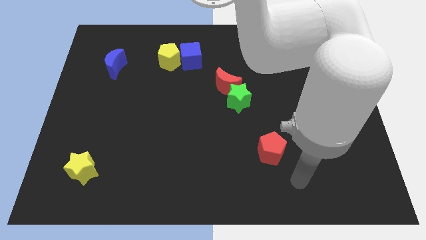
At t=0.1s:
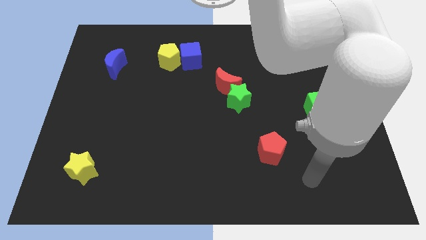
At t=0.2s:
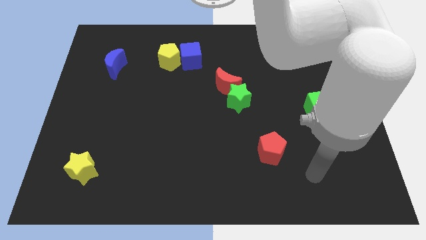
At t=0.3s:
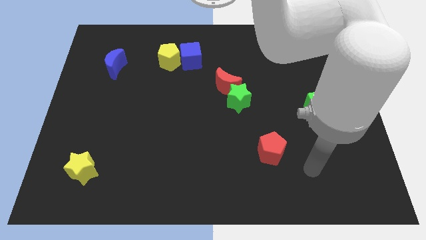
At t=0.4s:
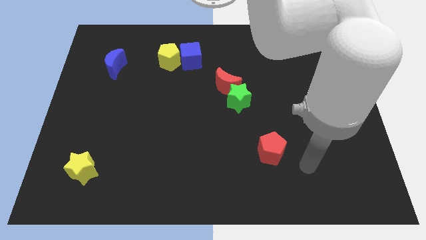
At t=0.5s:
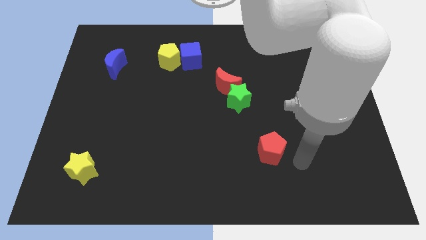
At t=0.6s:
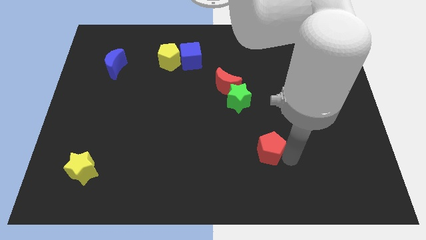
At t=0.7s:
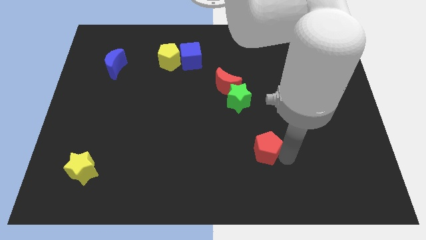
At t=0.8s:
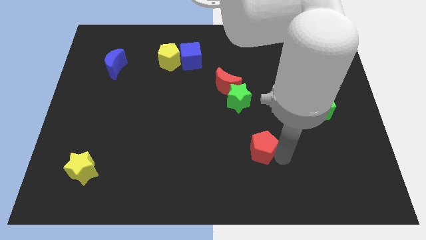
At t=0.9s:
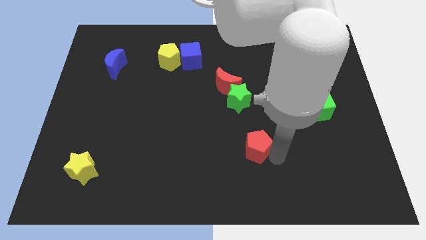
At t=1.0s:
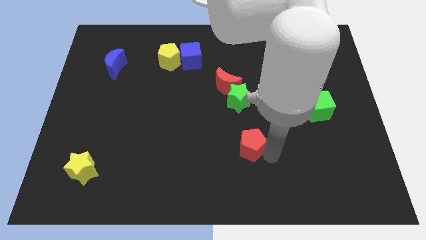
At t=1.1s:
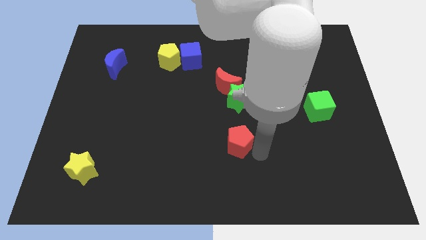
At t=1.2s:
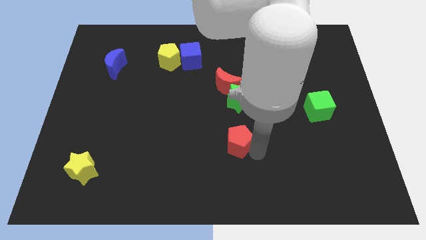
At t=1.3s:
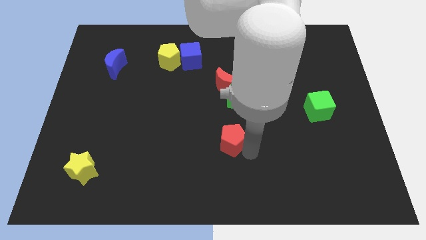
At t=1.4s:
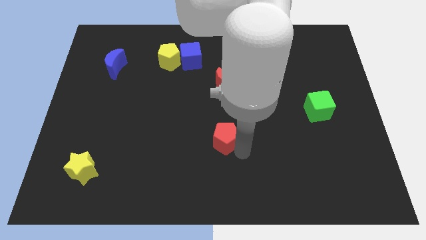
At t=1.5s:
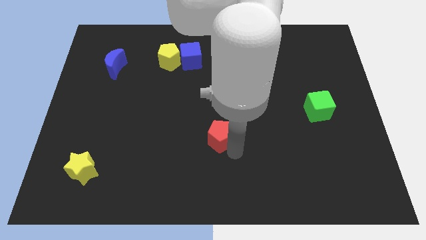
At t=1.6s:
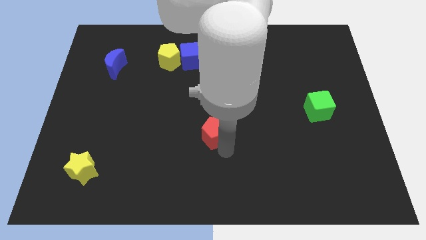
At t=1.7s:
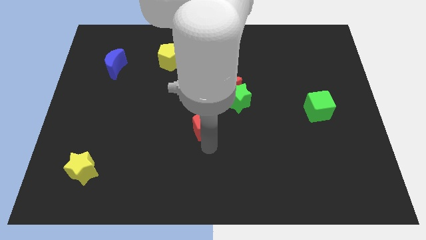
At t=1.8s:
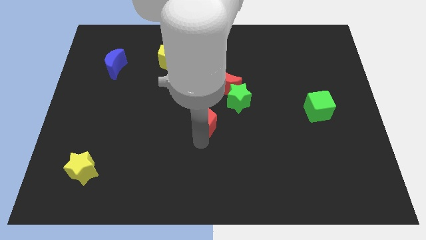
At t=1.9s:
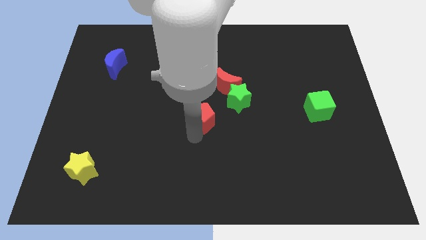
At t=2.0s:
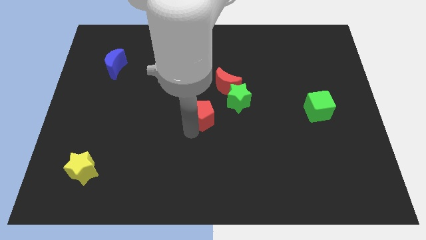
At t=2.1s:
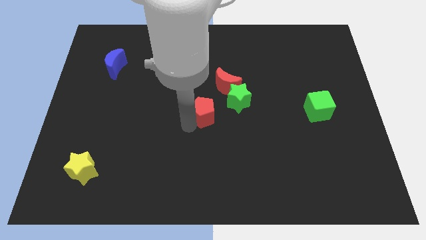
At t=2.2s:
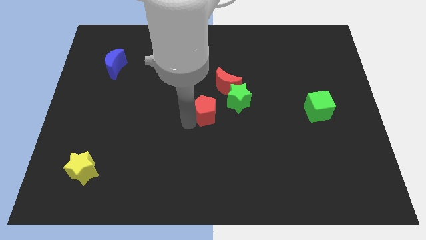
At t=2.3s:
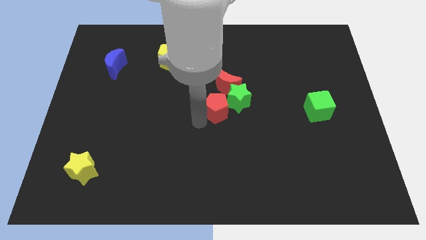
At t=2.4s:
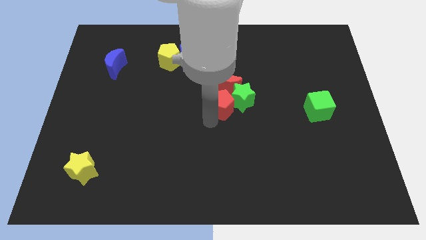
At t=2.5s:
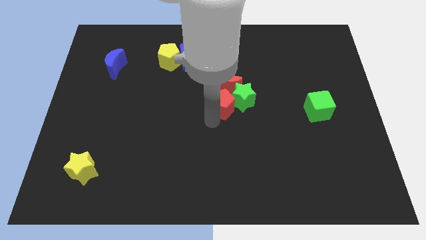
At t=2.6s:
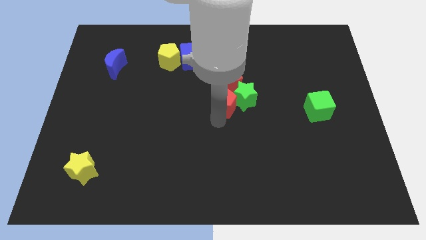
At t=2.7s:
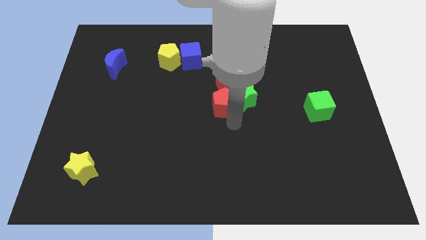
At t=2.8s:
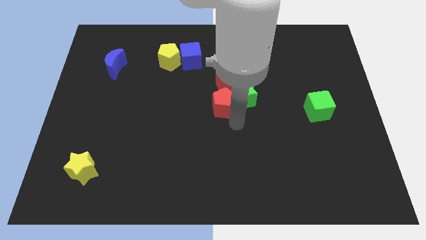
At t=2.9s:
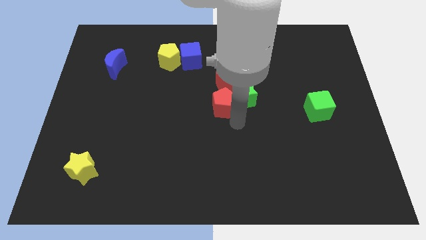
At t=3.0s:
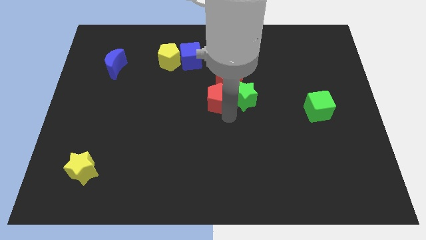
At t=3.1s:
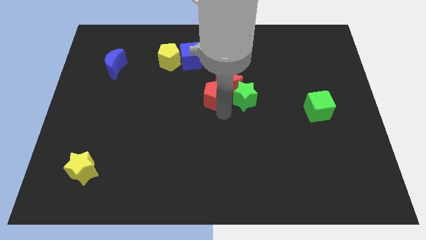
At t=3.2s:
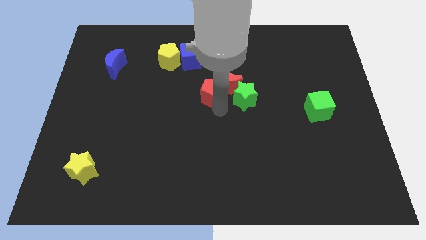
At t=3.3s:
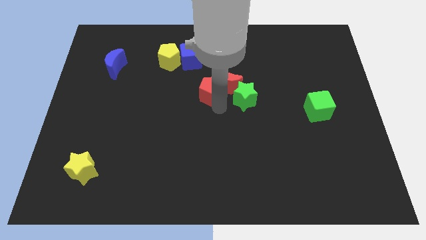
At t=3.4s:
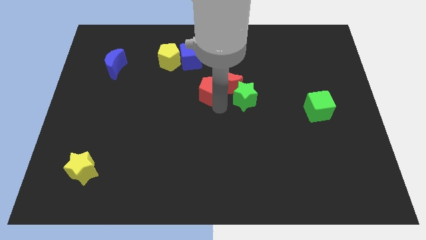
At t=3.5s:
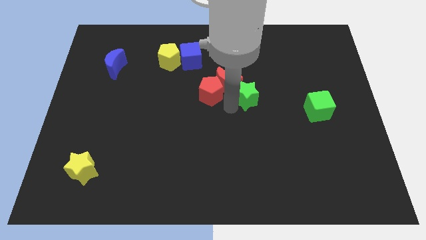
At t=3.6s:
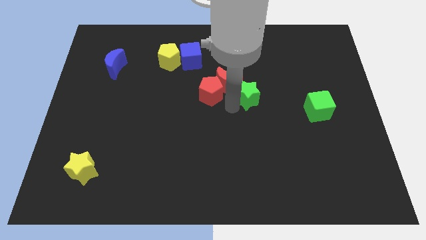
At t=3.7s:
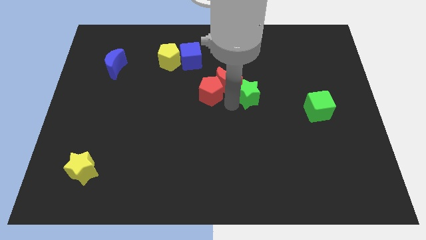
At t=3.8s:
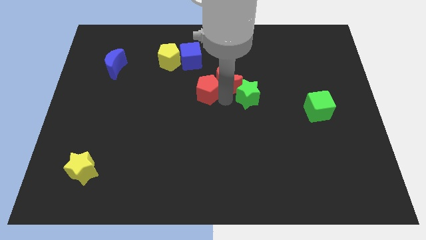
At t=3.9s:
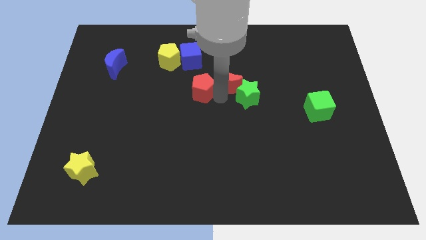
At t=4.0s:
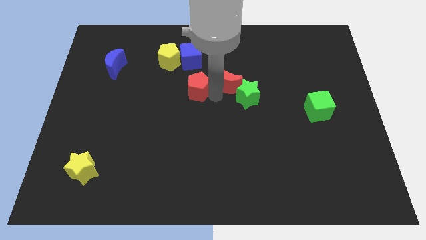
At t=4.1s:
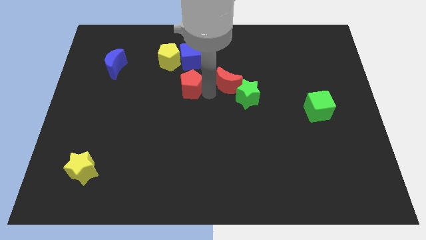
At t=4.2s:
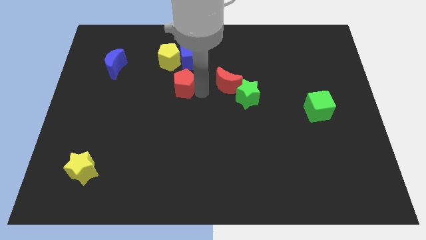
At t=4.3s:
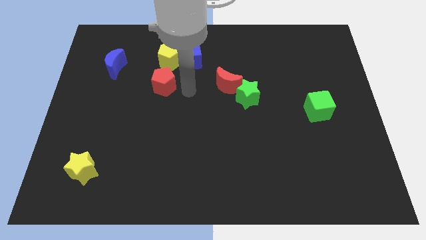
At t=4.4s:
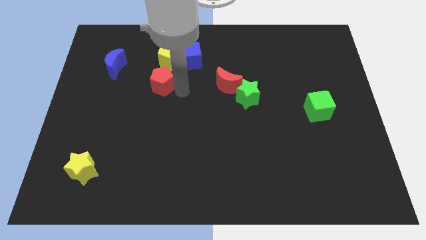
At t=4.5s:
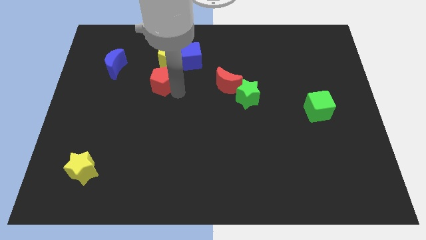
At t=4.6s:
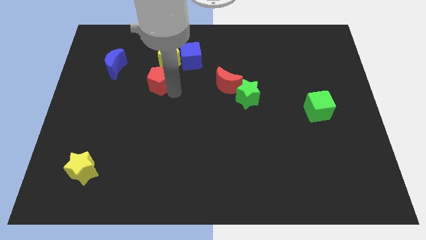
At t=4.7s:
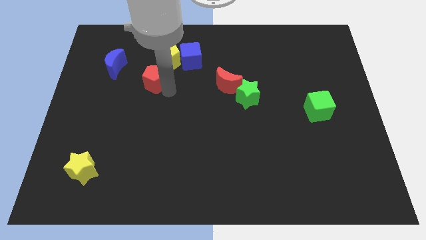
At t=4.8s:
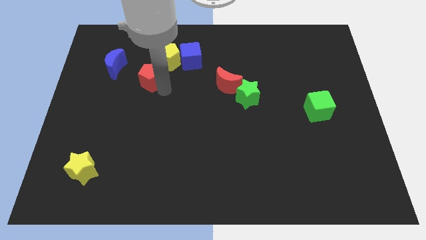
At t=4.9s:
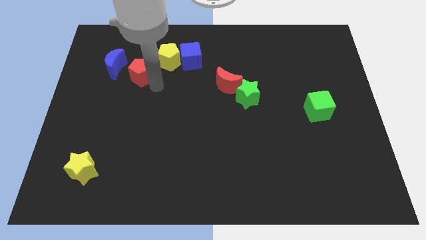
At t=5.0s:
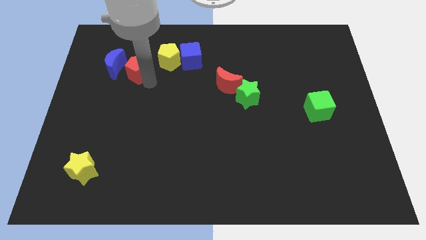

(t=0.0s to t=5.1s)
drag the red pentagon close to the yellow pentagon

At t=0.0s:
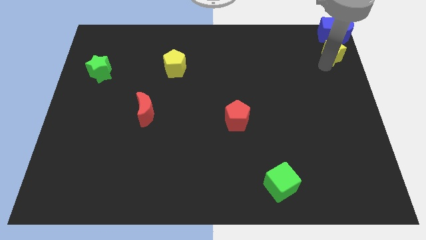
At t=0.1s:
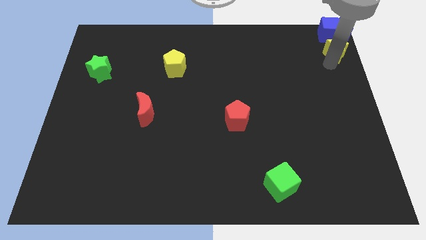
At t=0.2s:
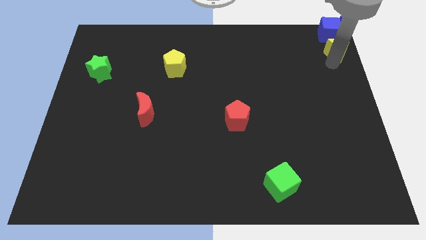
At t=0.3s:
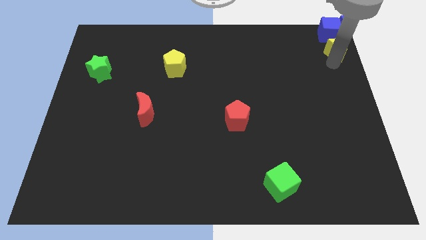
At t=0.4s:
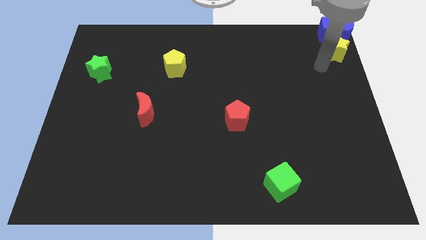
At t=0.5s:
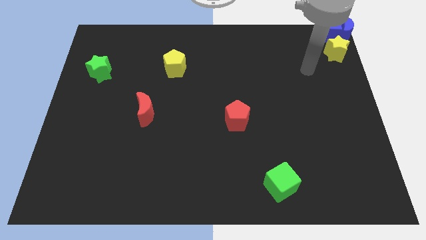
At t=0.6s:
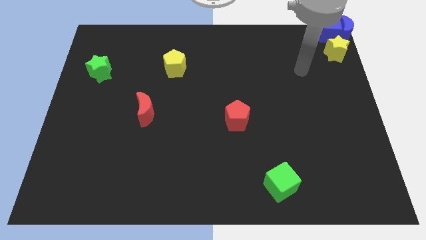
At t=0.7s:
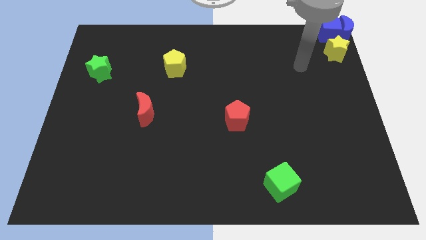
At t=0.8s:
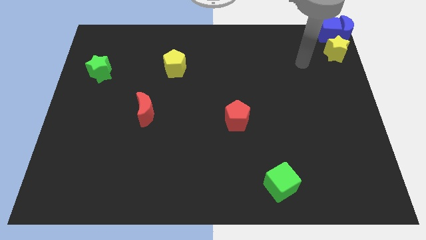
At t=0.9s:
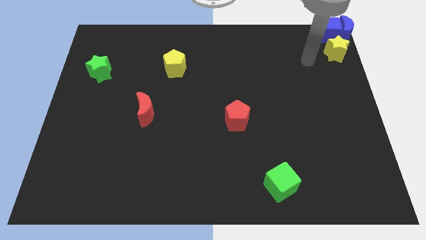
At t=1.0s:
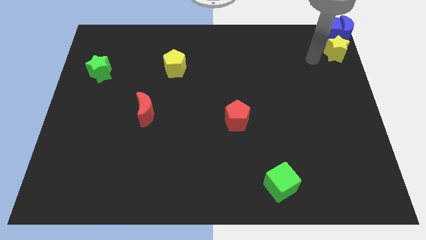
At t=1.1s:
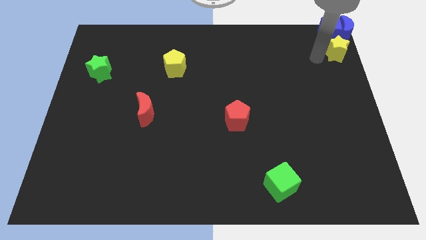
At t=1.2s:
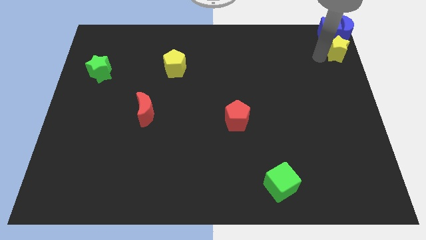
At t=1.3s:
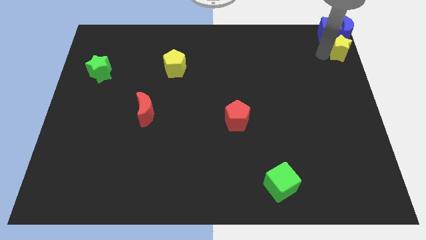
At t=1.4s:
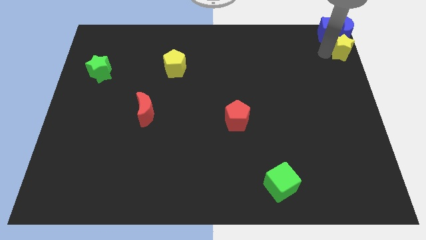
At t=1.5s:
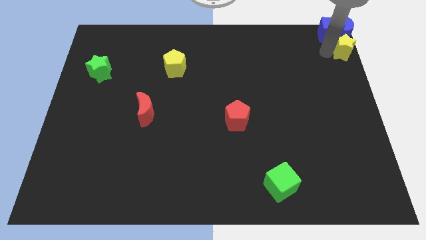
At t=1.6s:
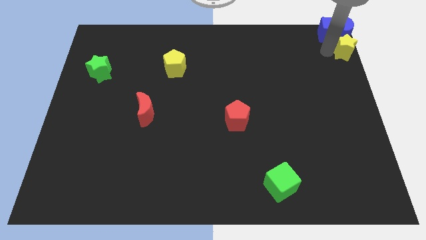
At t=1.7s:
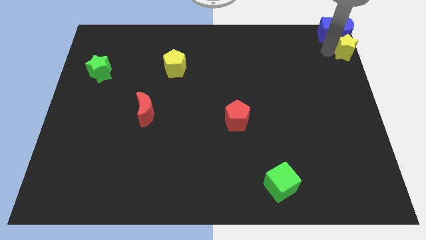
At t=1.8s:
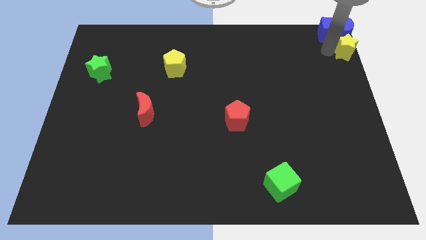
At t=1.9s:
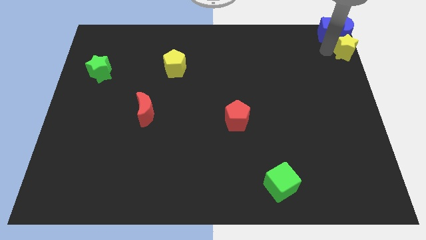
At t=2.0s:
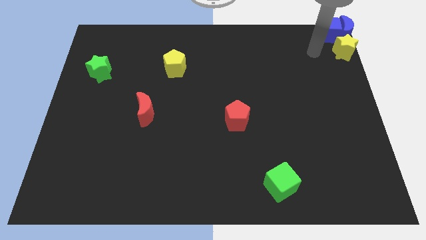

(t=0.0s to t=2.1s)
slide yellow star to the top right corner

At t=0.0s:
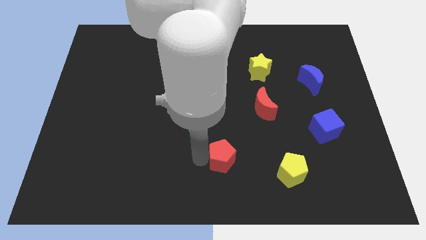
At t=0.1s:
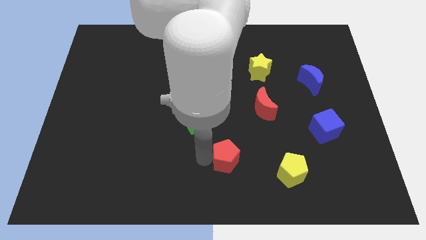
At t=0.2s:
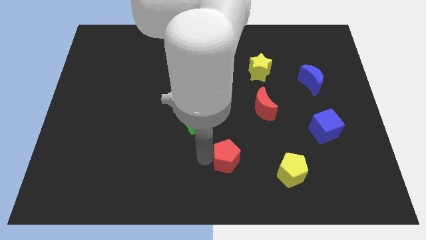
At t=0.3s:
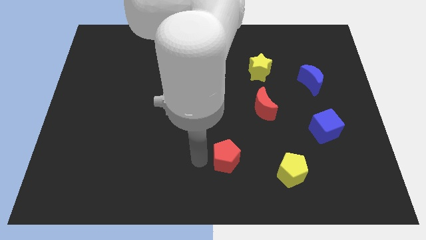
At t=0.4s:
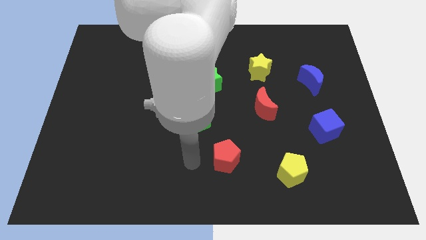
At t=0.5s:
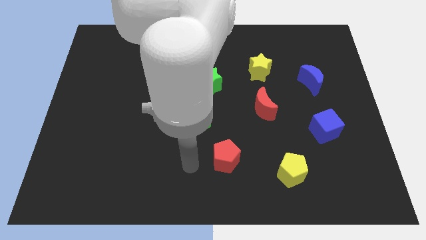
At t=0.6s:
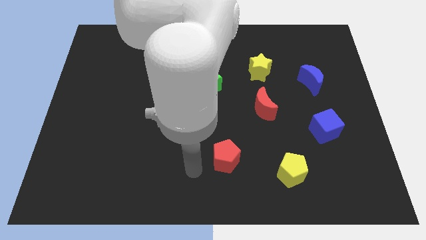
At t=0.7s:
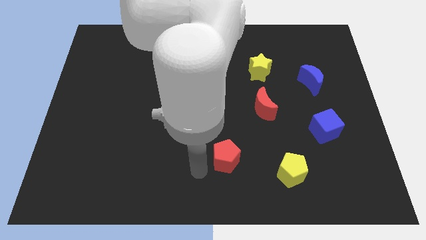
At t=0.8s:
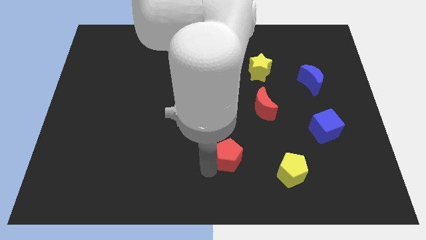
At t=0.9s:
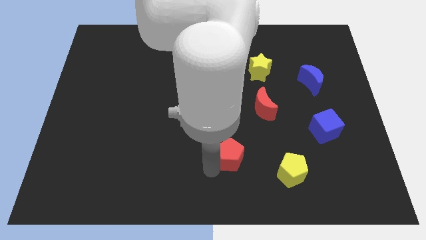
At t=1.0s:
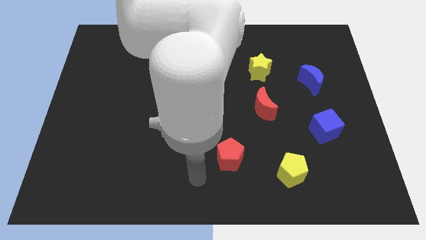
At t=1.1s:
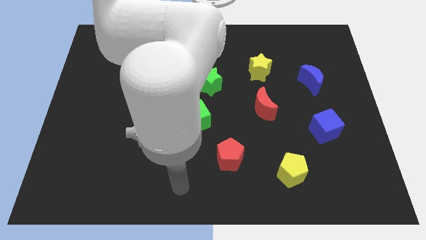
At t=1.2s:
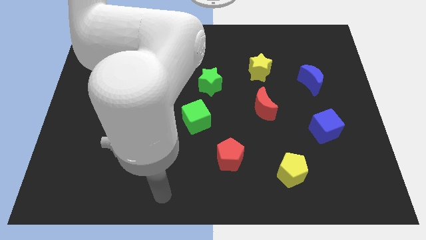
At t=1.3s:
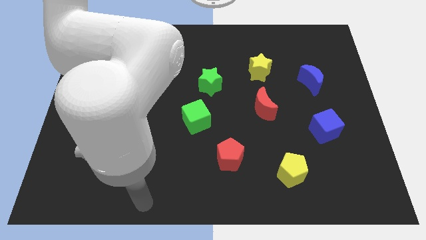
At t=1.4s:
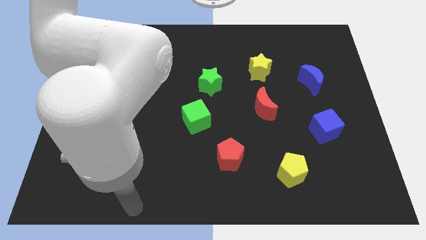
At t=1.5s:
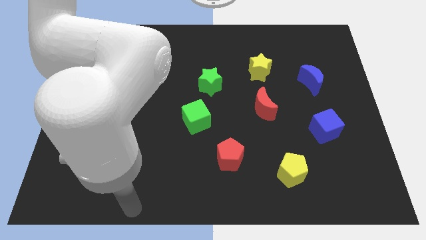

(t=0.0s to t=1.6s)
push the red pentagon left to the yellow pentagon

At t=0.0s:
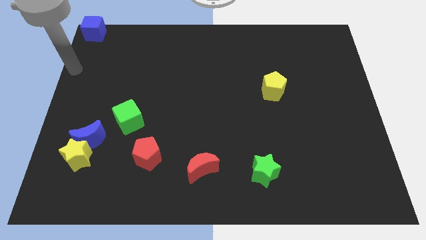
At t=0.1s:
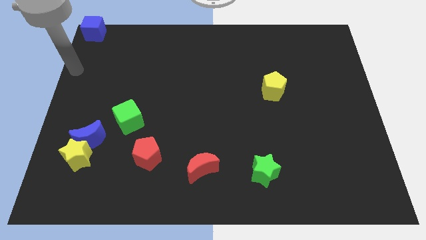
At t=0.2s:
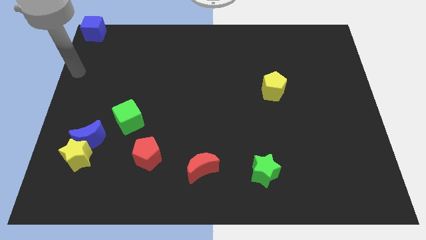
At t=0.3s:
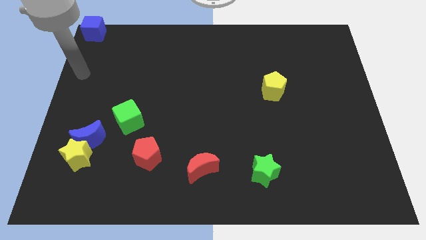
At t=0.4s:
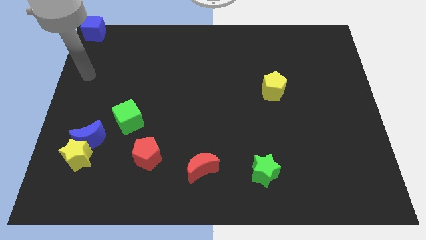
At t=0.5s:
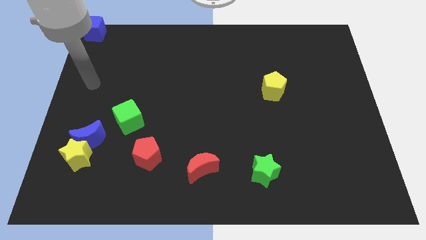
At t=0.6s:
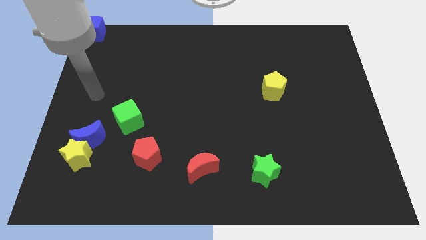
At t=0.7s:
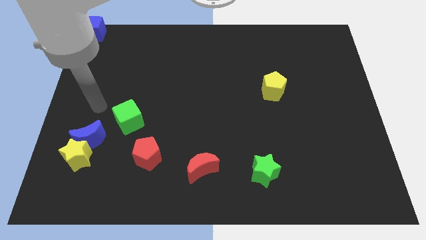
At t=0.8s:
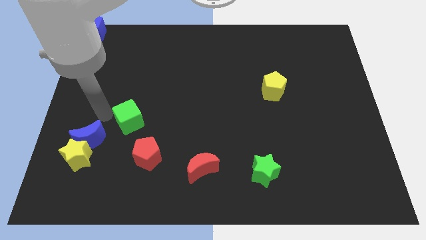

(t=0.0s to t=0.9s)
move arm towards green cube
